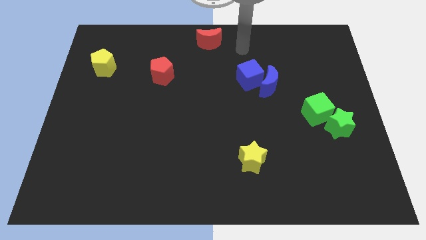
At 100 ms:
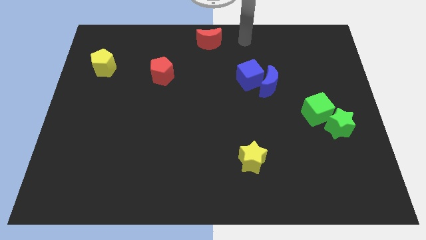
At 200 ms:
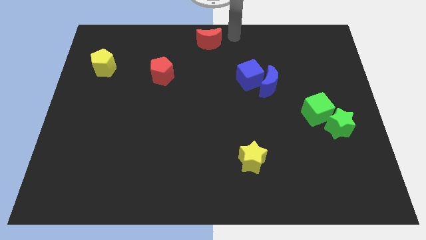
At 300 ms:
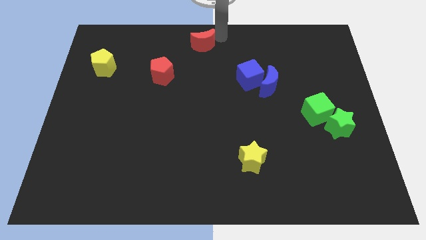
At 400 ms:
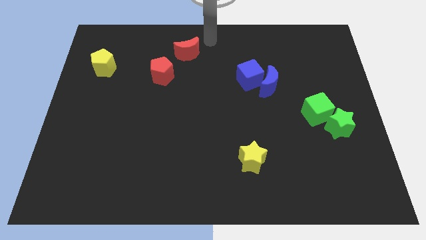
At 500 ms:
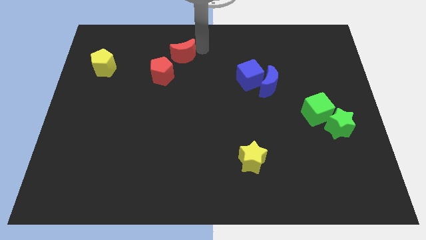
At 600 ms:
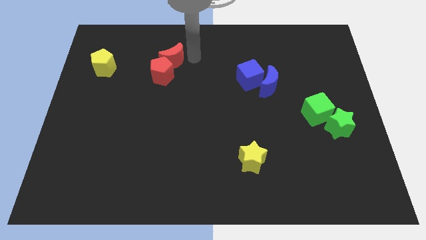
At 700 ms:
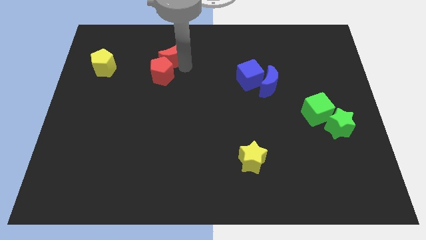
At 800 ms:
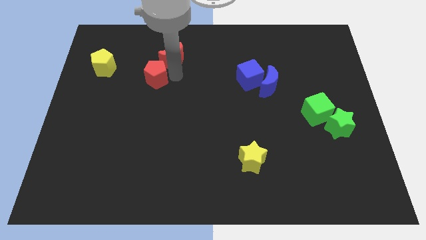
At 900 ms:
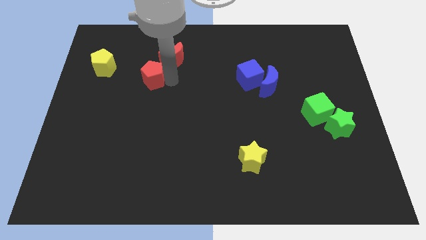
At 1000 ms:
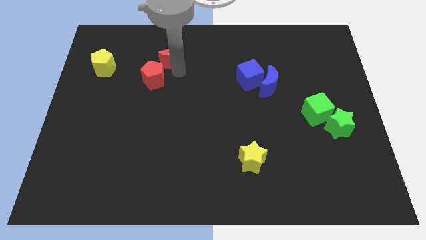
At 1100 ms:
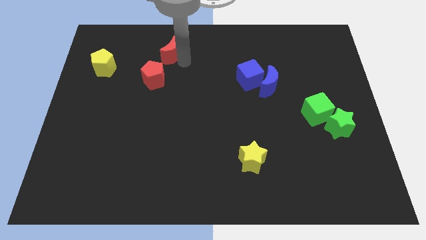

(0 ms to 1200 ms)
move the arm away from the red crescent

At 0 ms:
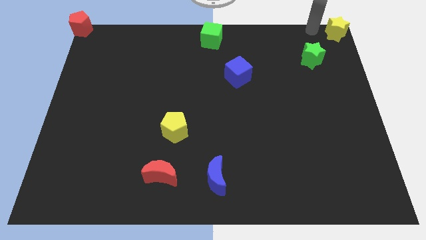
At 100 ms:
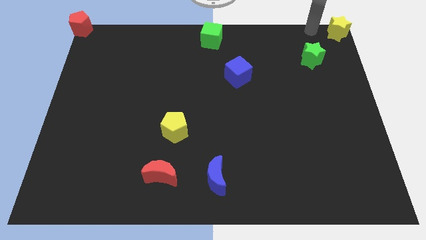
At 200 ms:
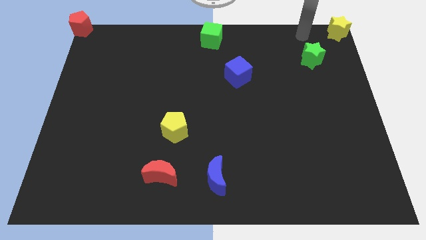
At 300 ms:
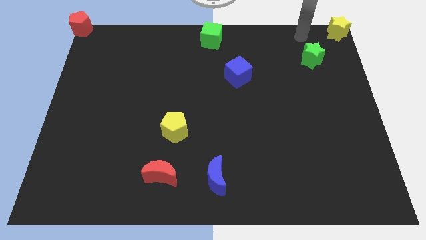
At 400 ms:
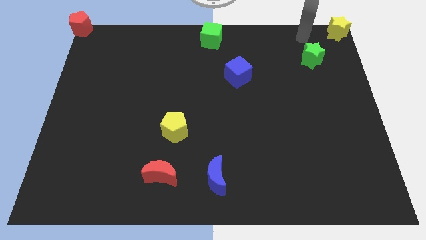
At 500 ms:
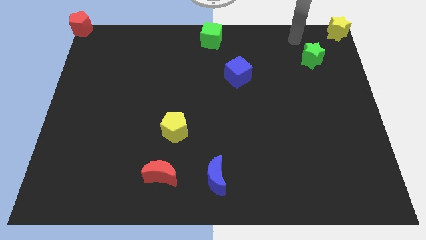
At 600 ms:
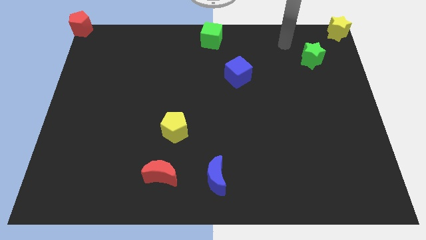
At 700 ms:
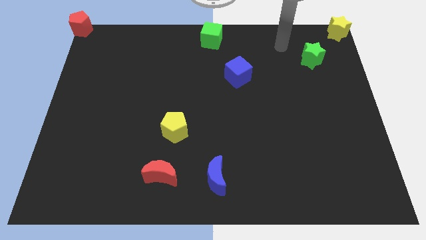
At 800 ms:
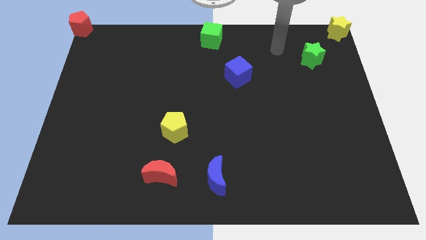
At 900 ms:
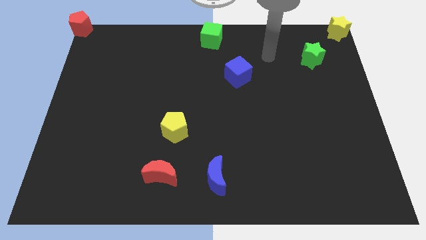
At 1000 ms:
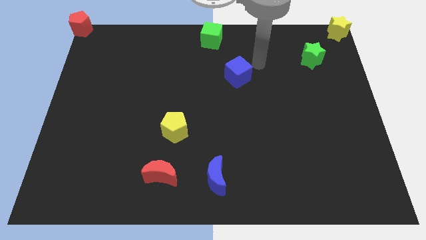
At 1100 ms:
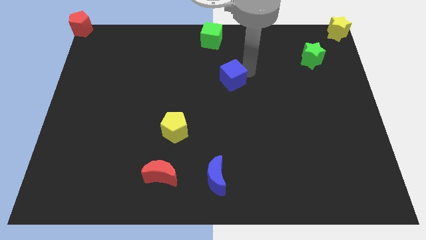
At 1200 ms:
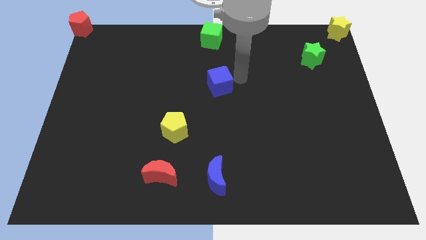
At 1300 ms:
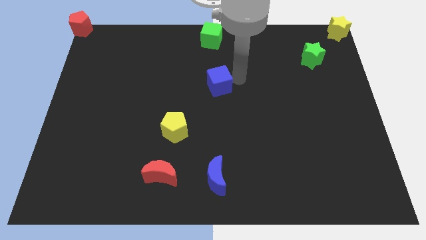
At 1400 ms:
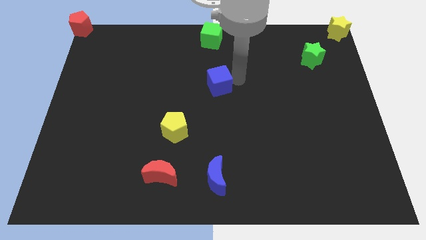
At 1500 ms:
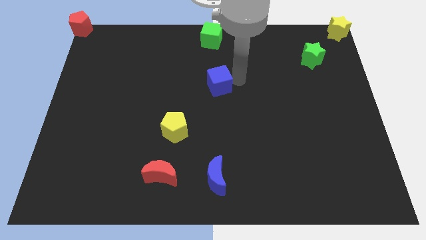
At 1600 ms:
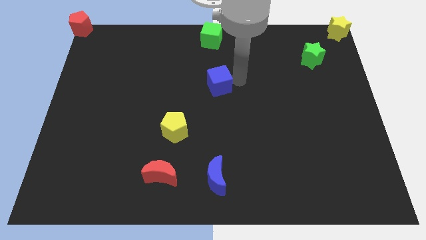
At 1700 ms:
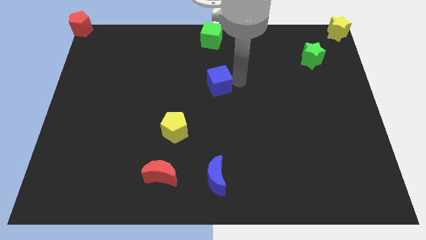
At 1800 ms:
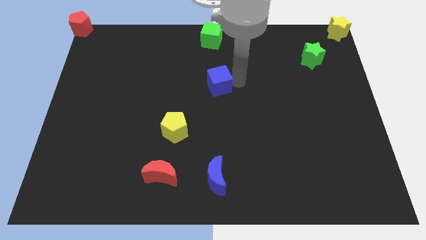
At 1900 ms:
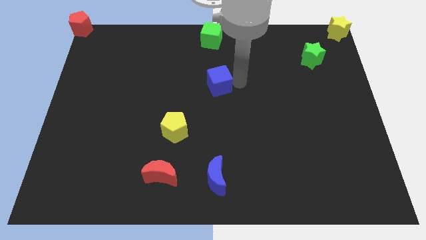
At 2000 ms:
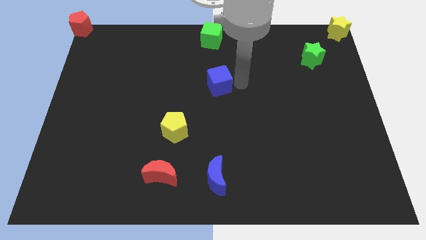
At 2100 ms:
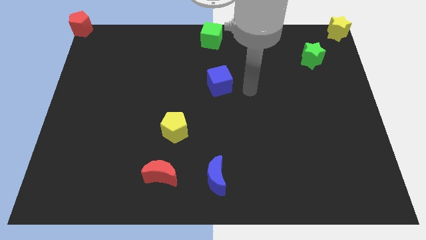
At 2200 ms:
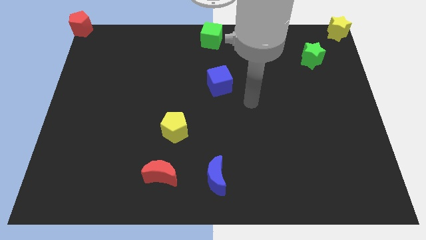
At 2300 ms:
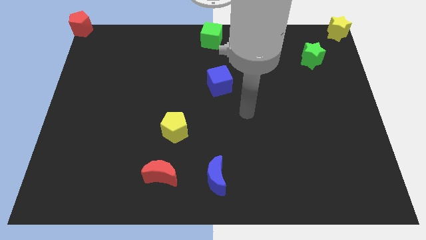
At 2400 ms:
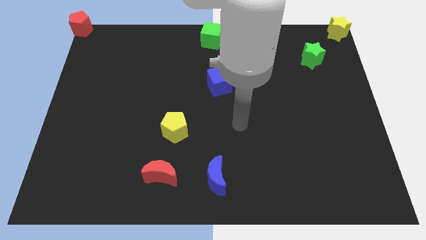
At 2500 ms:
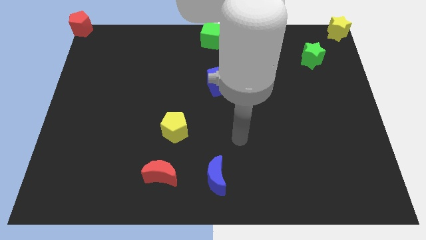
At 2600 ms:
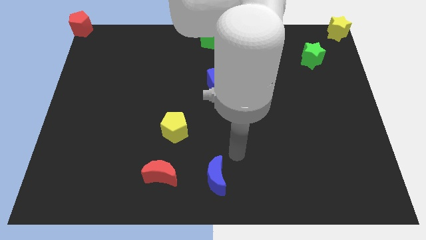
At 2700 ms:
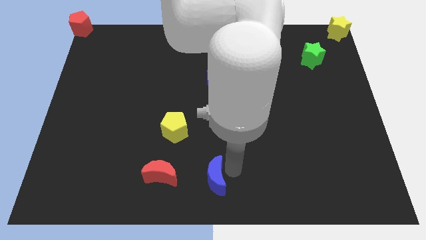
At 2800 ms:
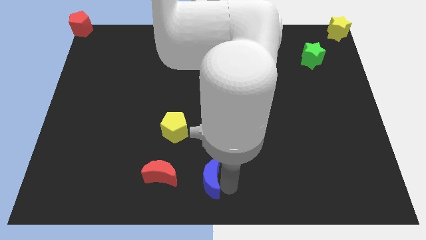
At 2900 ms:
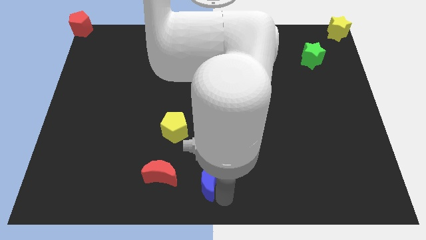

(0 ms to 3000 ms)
push the blue cube below the green cube

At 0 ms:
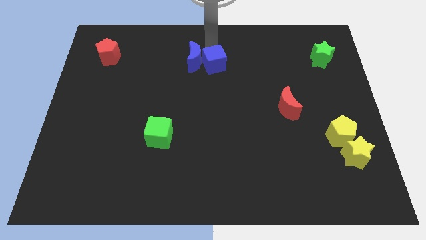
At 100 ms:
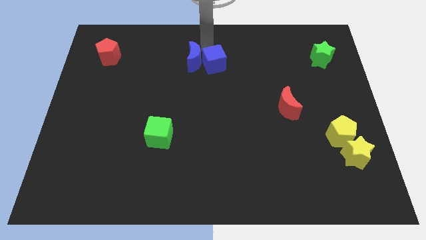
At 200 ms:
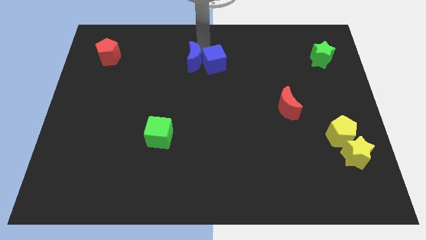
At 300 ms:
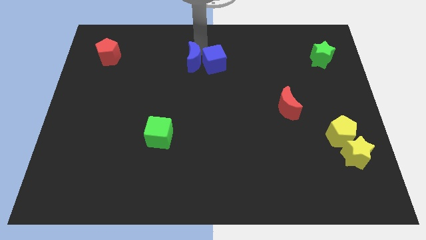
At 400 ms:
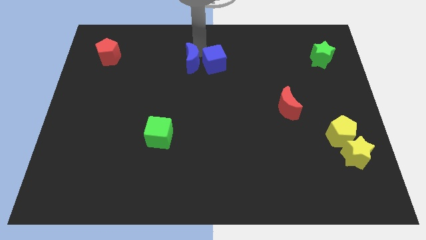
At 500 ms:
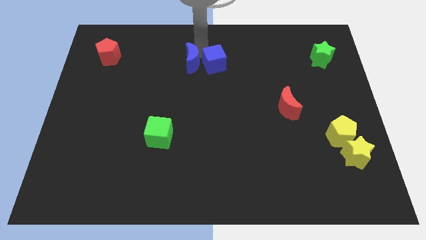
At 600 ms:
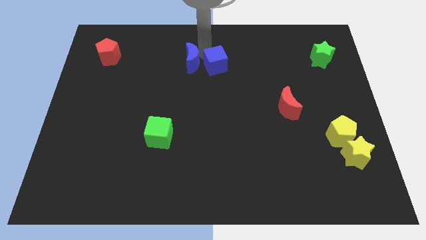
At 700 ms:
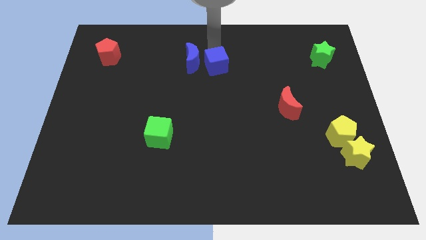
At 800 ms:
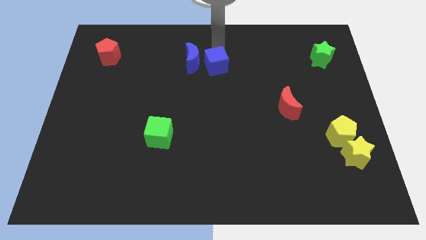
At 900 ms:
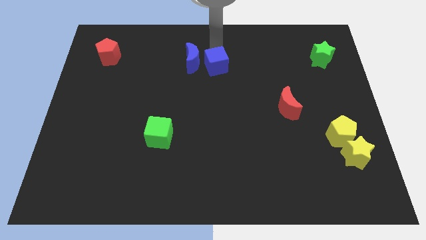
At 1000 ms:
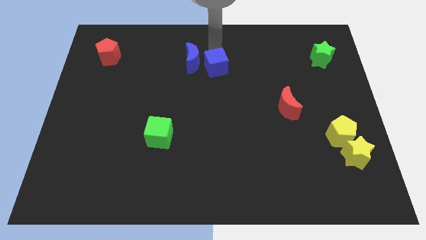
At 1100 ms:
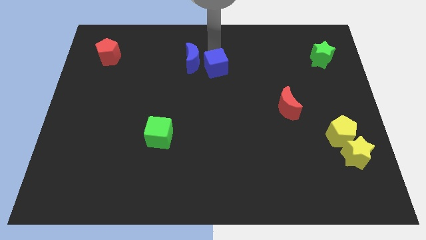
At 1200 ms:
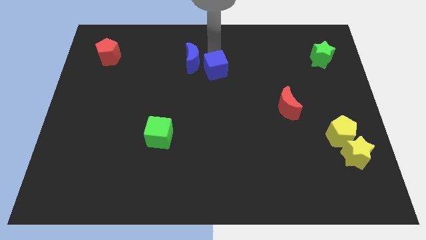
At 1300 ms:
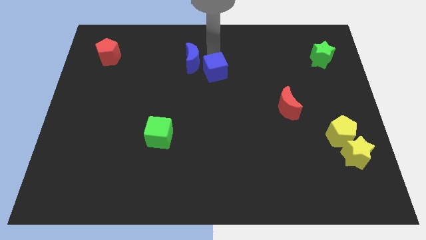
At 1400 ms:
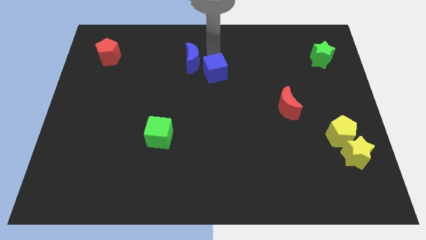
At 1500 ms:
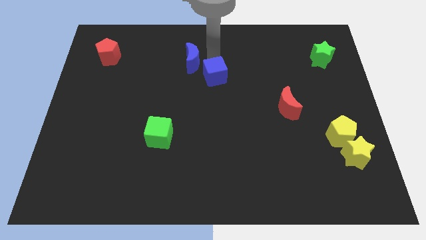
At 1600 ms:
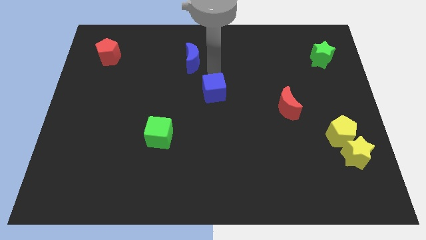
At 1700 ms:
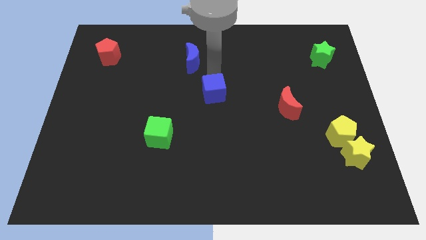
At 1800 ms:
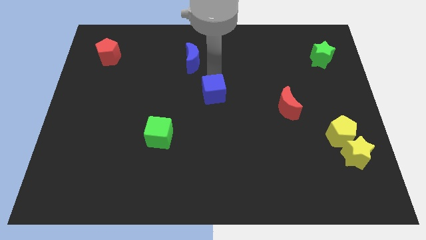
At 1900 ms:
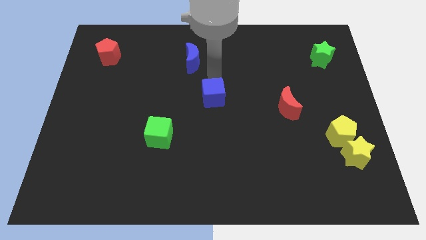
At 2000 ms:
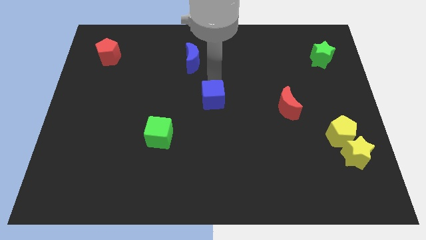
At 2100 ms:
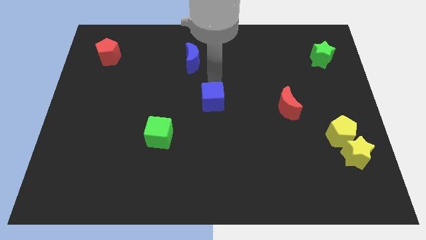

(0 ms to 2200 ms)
move the blue cube away from the blue crescent

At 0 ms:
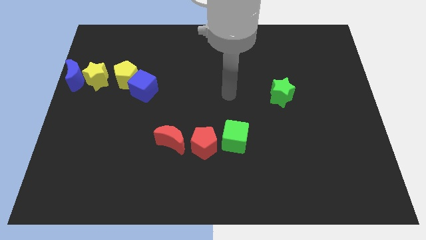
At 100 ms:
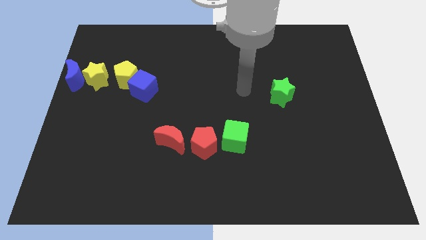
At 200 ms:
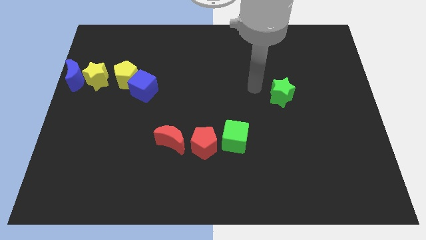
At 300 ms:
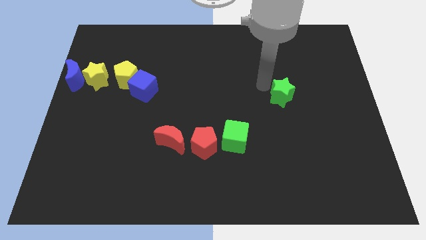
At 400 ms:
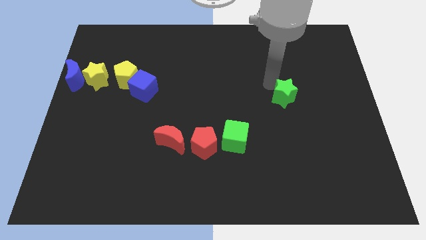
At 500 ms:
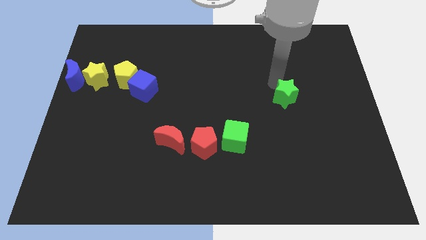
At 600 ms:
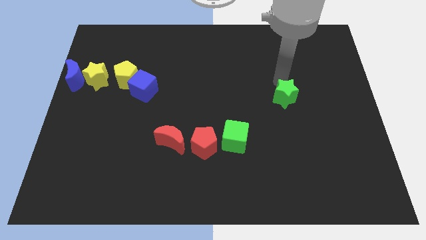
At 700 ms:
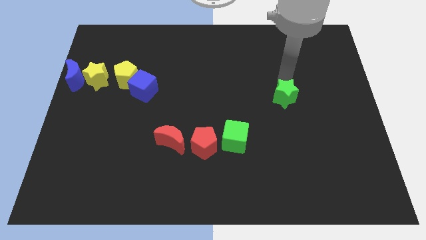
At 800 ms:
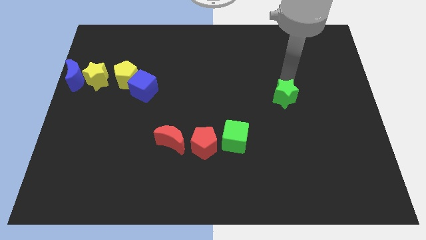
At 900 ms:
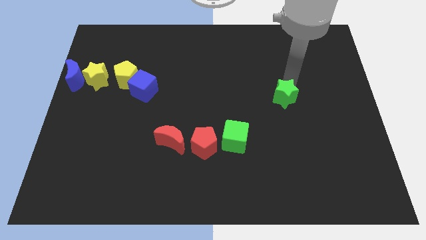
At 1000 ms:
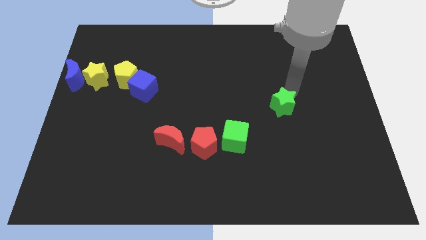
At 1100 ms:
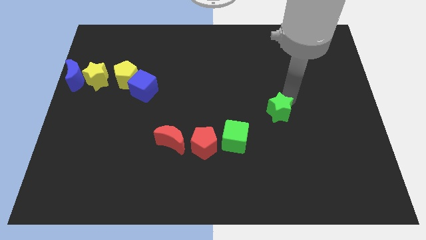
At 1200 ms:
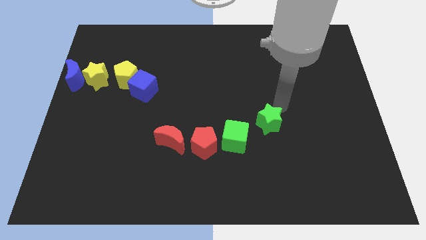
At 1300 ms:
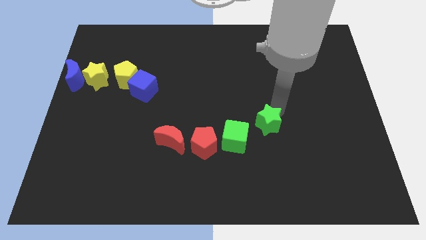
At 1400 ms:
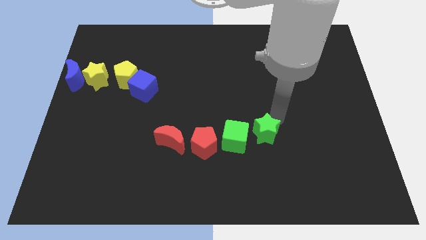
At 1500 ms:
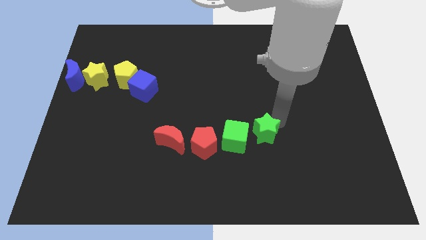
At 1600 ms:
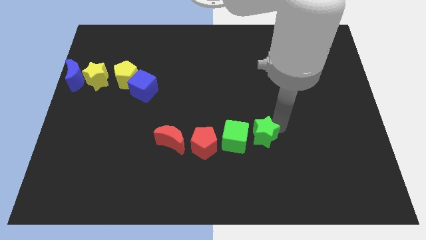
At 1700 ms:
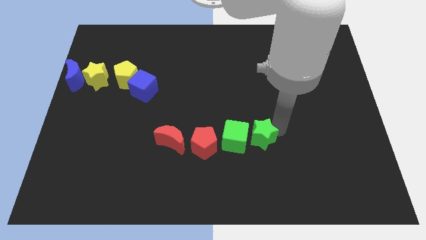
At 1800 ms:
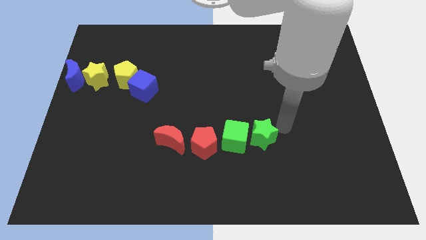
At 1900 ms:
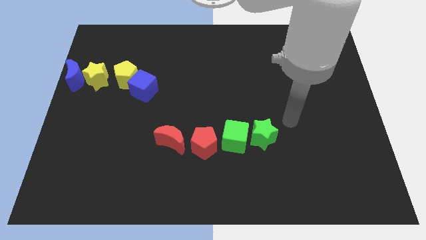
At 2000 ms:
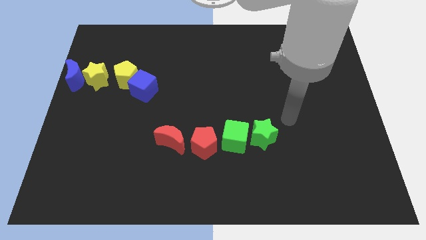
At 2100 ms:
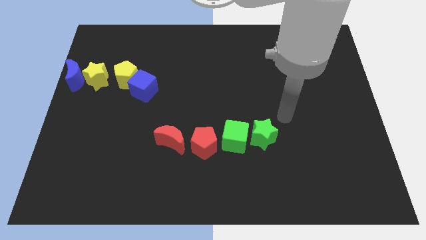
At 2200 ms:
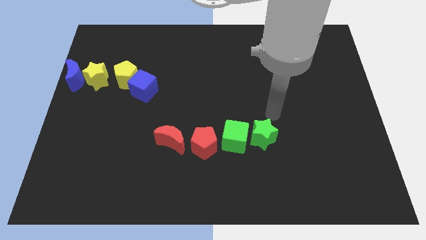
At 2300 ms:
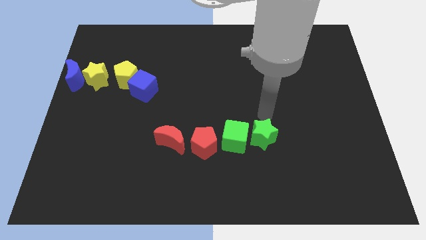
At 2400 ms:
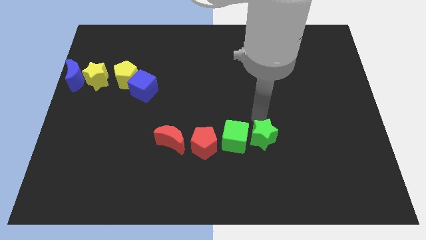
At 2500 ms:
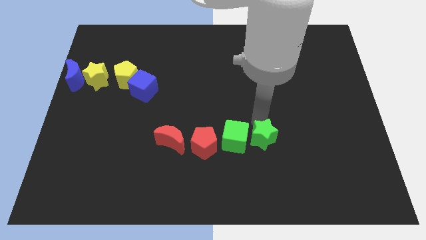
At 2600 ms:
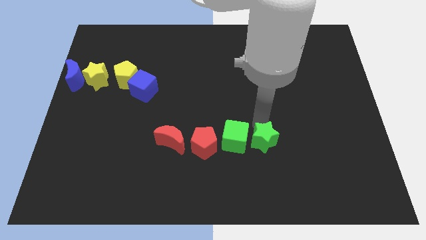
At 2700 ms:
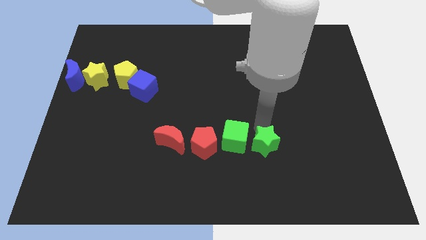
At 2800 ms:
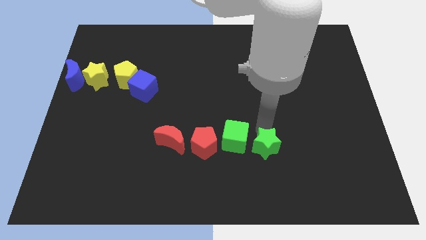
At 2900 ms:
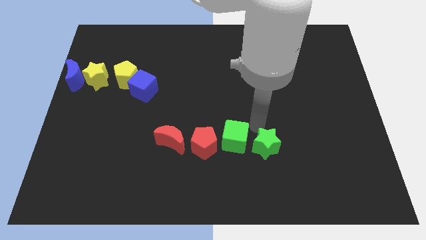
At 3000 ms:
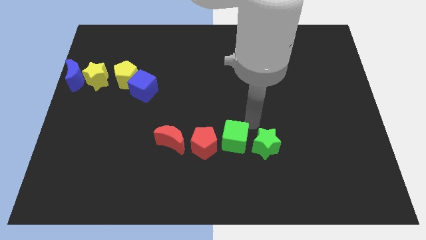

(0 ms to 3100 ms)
move the green star to the right side of the green cube
